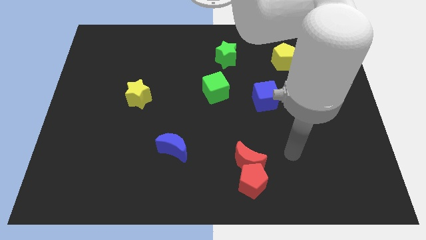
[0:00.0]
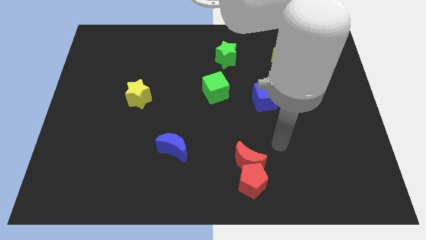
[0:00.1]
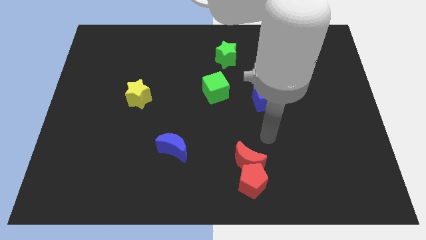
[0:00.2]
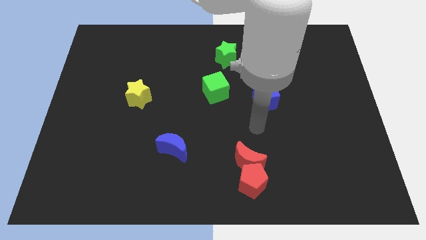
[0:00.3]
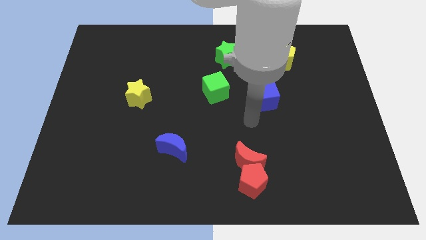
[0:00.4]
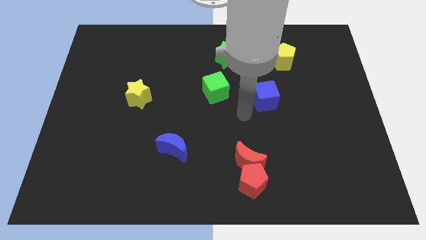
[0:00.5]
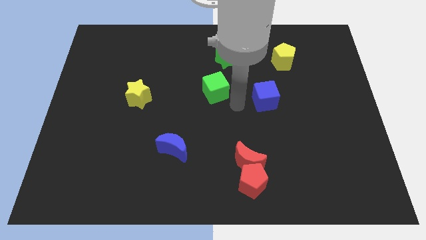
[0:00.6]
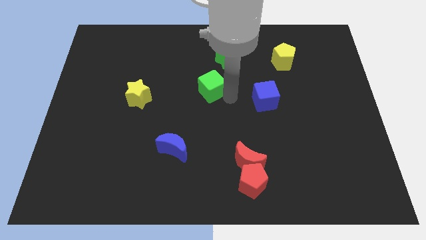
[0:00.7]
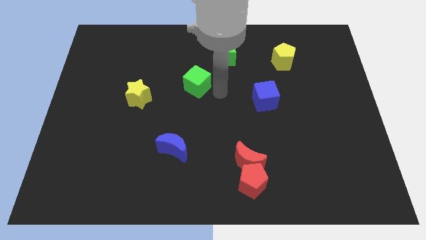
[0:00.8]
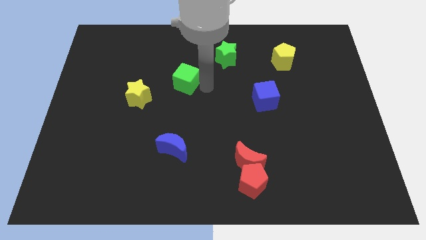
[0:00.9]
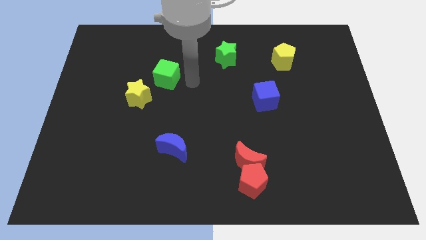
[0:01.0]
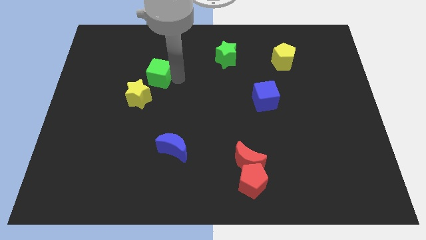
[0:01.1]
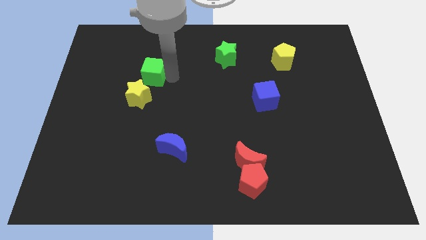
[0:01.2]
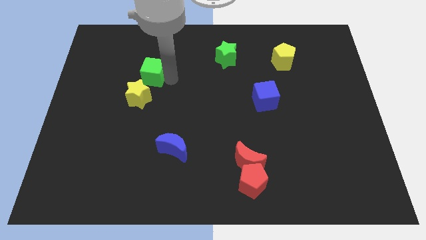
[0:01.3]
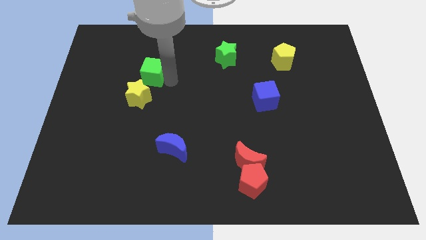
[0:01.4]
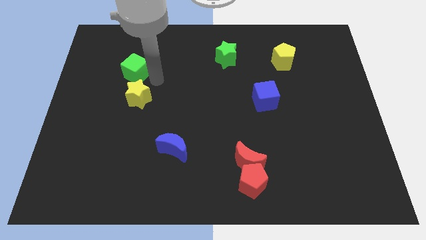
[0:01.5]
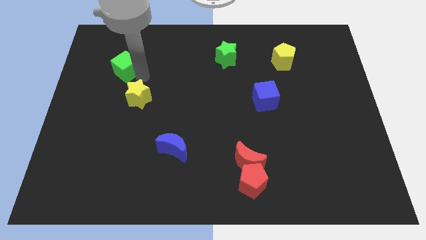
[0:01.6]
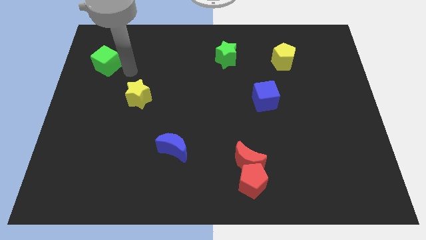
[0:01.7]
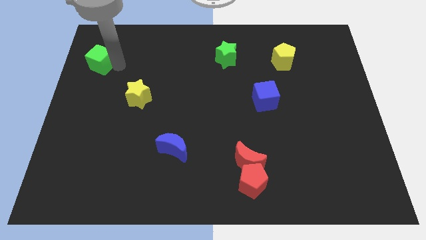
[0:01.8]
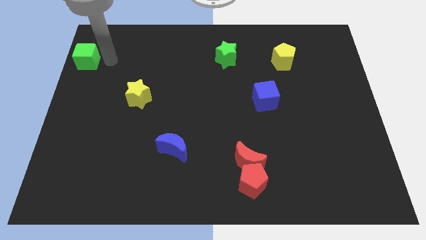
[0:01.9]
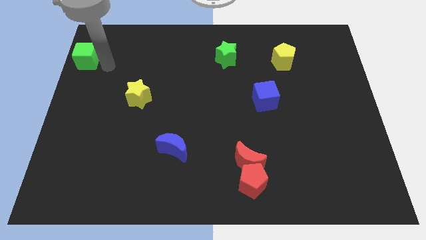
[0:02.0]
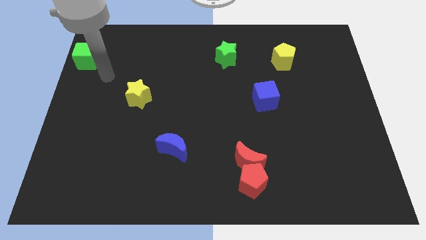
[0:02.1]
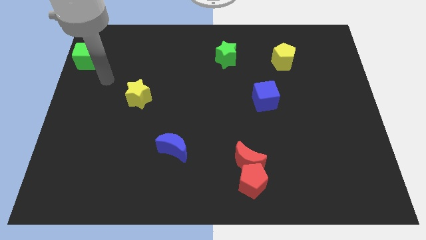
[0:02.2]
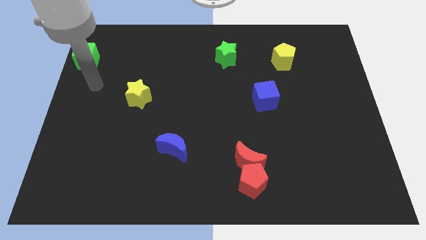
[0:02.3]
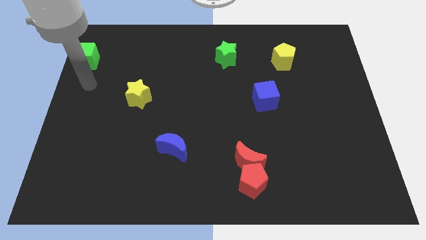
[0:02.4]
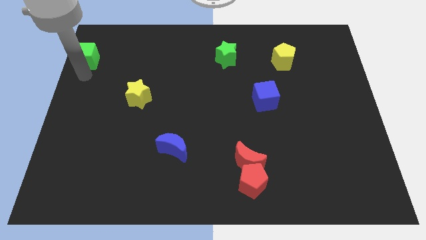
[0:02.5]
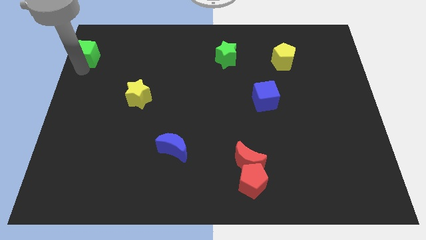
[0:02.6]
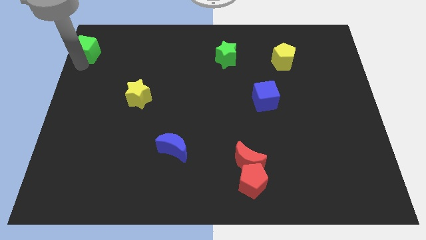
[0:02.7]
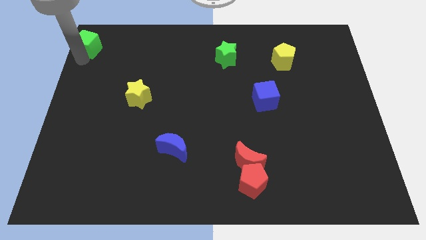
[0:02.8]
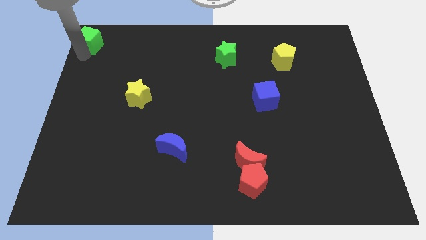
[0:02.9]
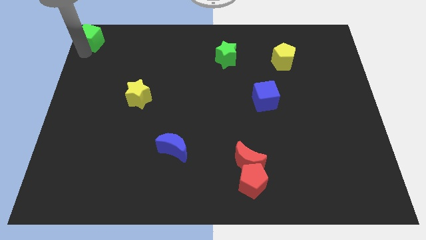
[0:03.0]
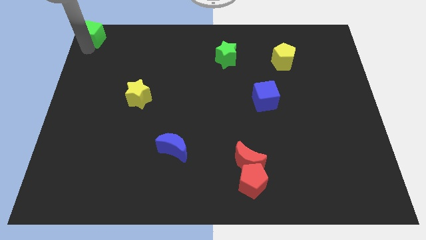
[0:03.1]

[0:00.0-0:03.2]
put the green cube diagonally to yellow star

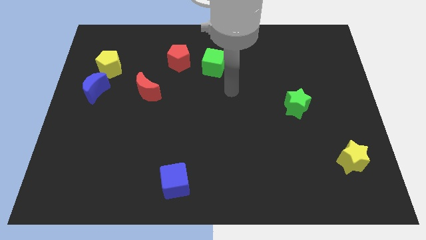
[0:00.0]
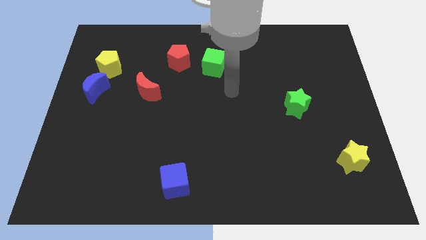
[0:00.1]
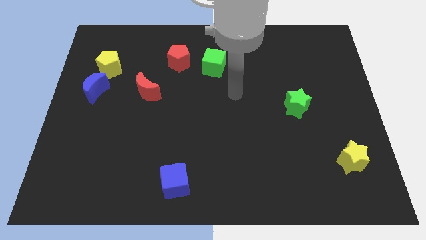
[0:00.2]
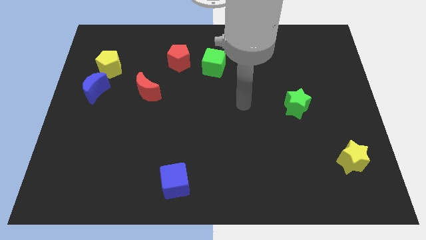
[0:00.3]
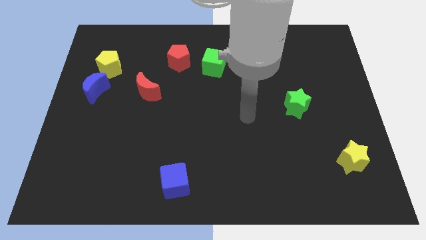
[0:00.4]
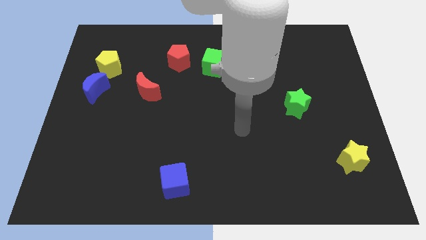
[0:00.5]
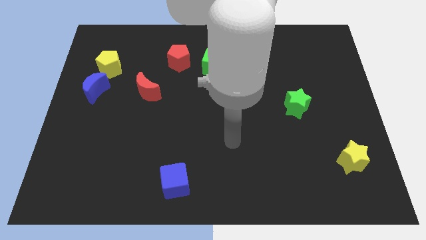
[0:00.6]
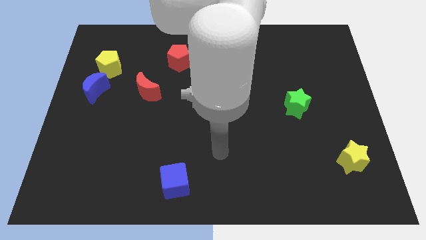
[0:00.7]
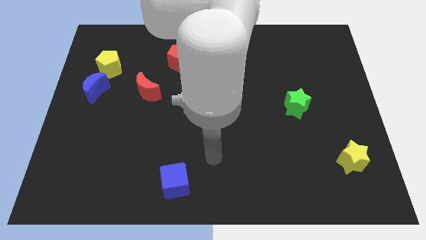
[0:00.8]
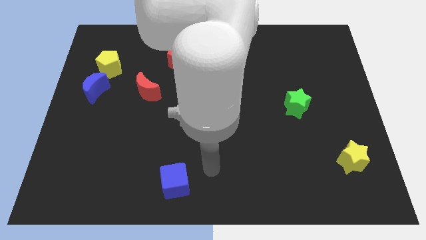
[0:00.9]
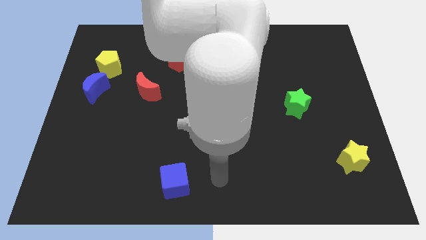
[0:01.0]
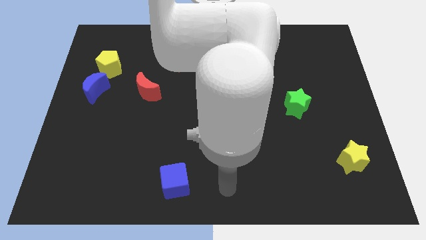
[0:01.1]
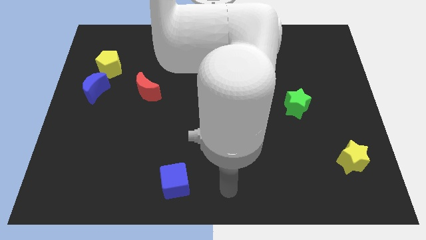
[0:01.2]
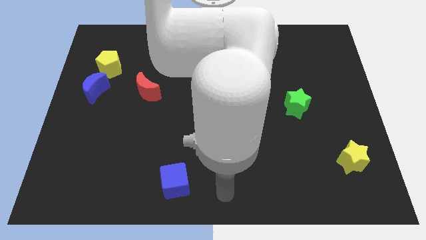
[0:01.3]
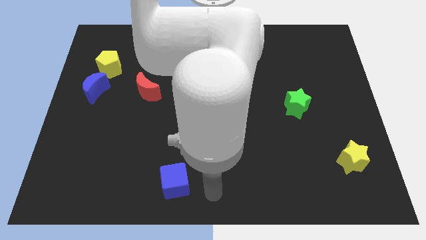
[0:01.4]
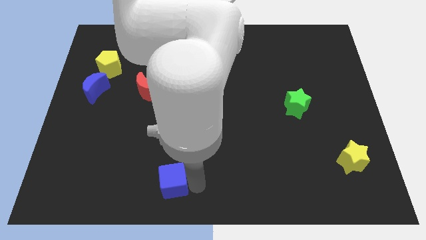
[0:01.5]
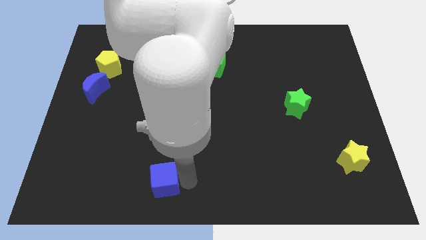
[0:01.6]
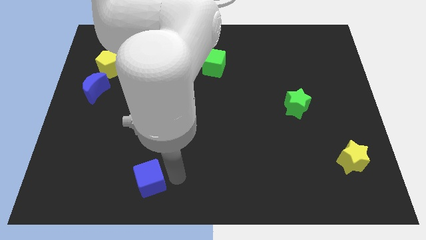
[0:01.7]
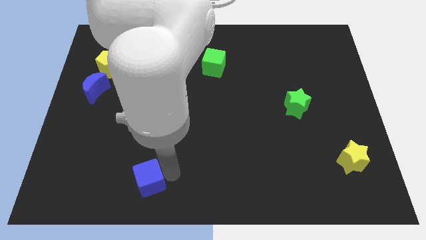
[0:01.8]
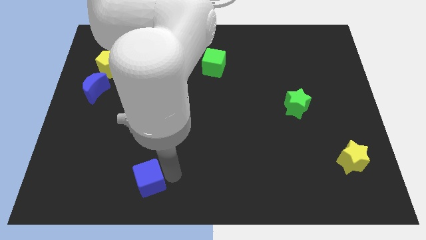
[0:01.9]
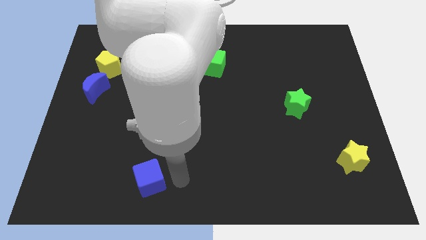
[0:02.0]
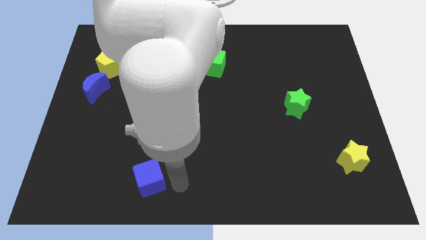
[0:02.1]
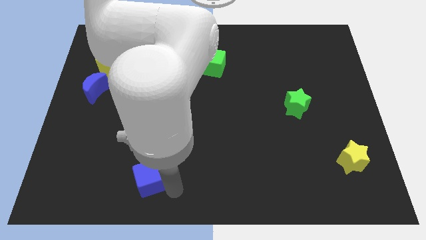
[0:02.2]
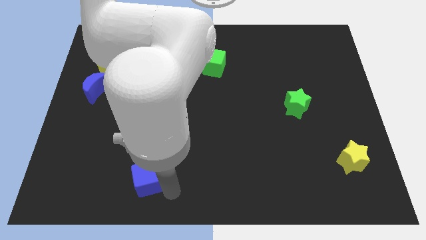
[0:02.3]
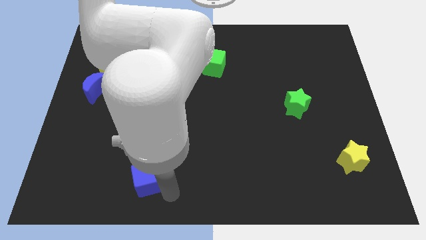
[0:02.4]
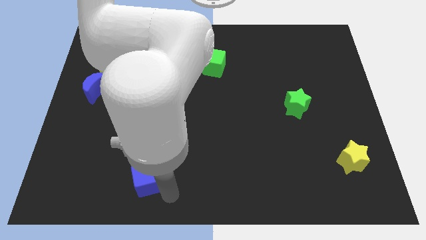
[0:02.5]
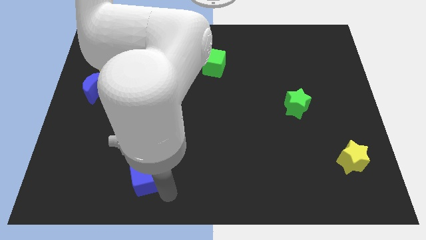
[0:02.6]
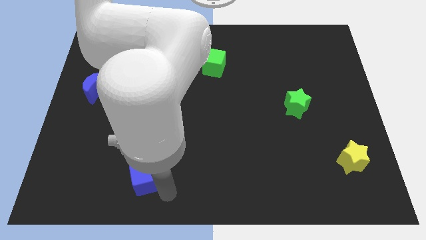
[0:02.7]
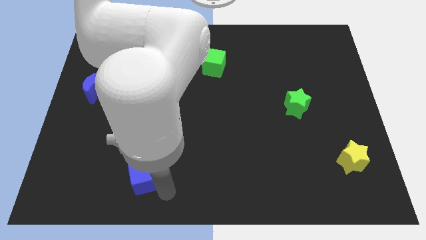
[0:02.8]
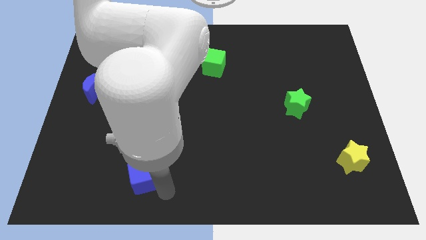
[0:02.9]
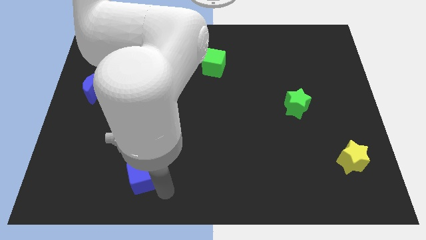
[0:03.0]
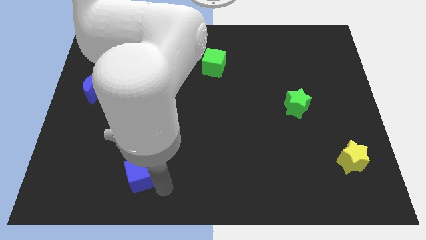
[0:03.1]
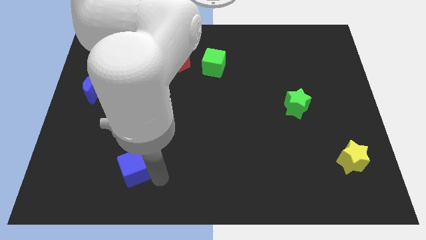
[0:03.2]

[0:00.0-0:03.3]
slightly push the blue cube below red moon

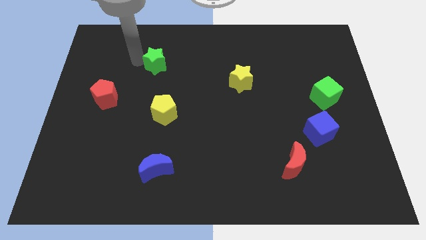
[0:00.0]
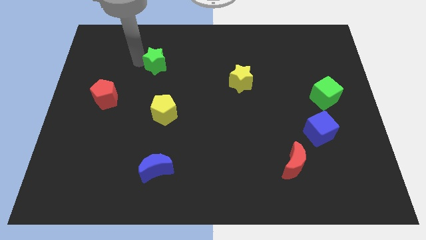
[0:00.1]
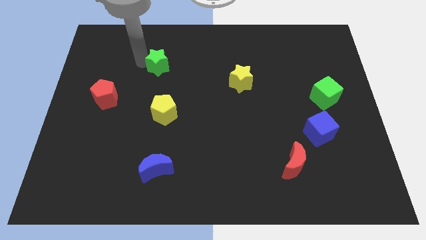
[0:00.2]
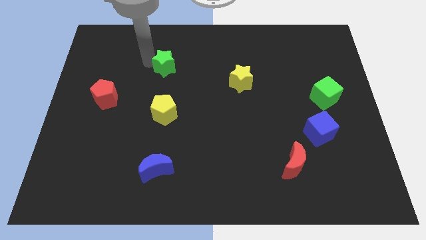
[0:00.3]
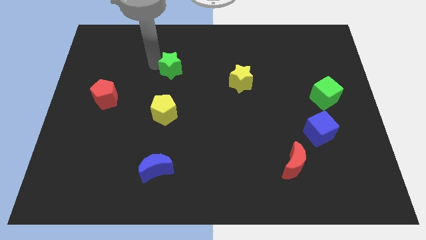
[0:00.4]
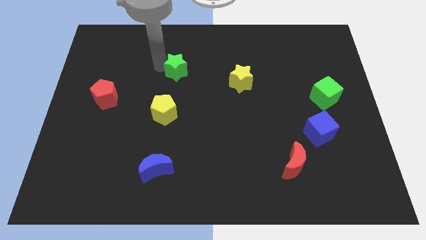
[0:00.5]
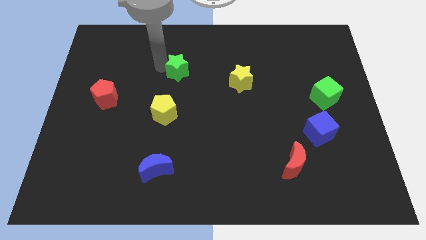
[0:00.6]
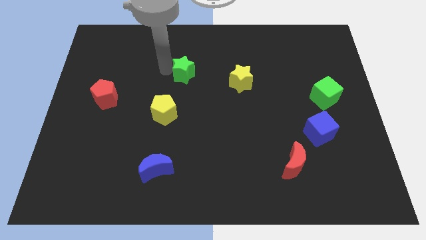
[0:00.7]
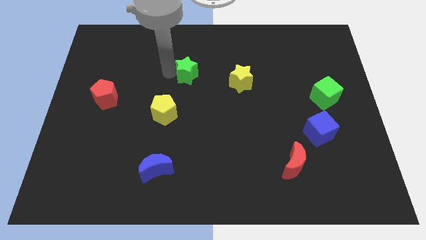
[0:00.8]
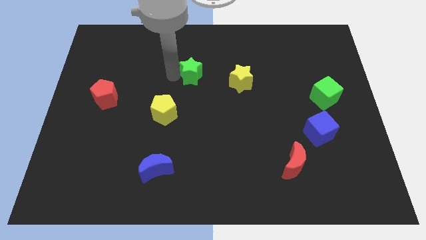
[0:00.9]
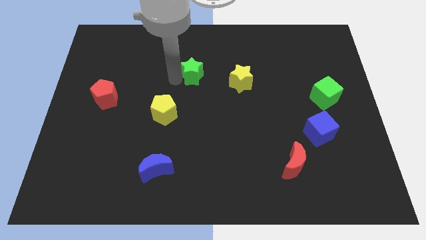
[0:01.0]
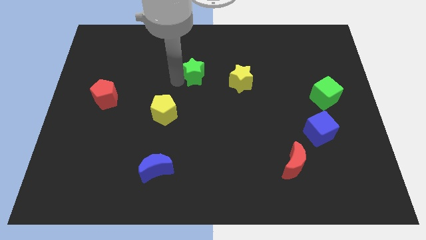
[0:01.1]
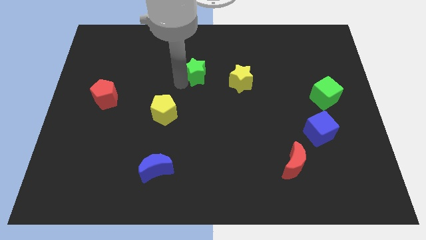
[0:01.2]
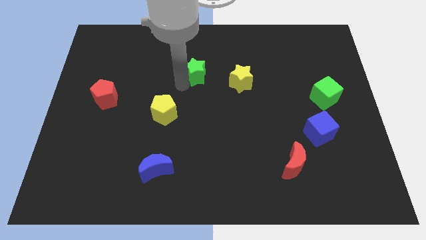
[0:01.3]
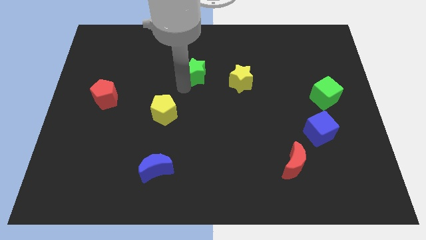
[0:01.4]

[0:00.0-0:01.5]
slide the green star towards the left side of the yellow block

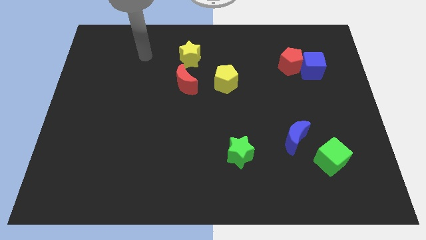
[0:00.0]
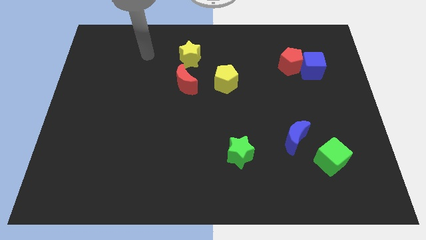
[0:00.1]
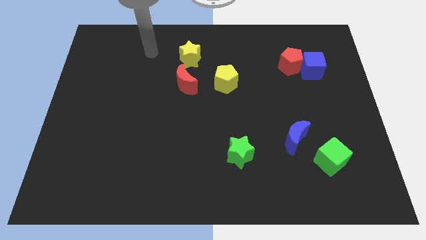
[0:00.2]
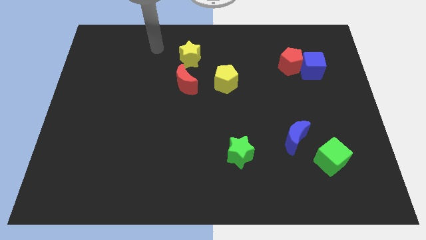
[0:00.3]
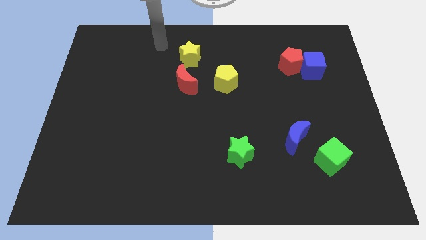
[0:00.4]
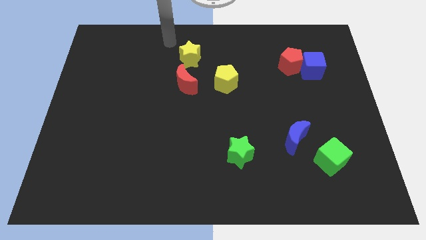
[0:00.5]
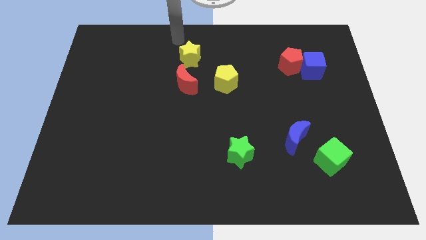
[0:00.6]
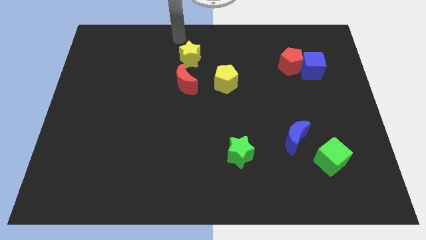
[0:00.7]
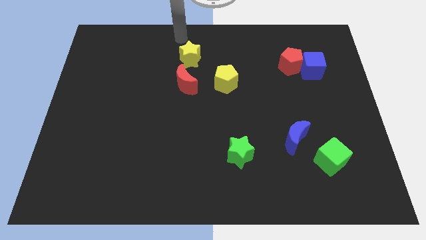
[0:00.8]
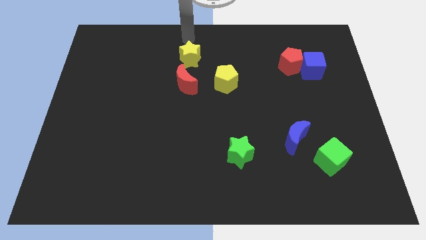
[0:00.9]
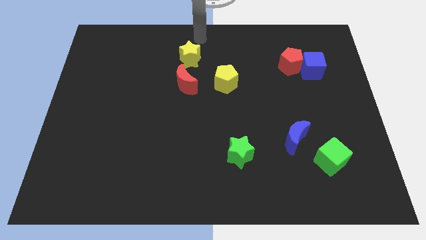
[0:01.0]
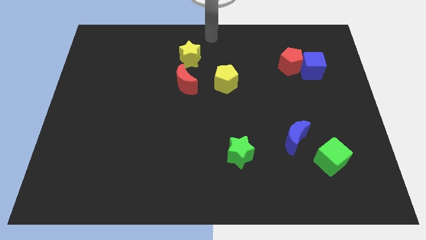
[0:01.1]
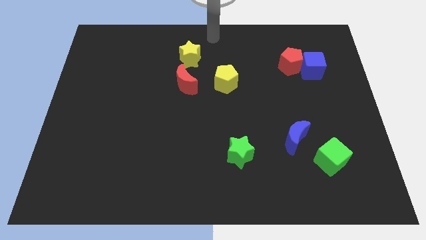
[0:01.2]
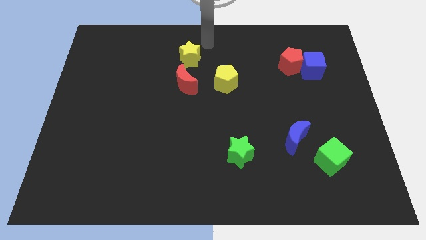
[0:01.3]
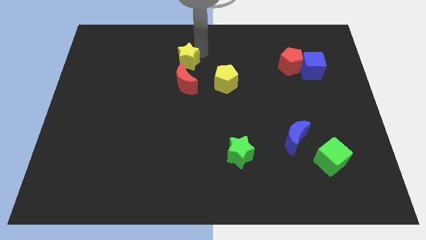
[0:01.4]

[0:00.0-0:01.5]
tap the yellow star
